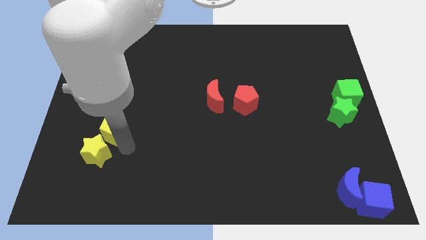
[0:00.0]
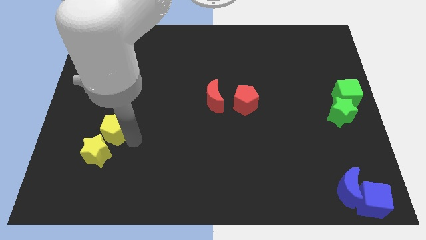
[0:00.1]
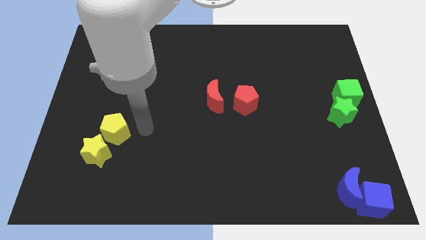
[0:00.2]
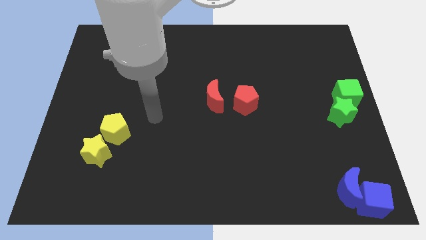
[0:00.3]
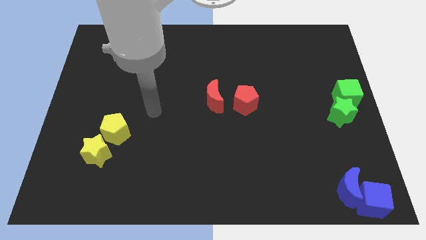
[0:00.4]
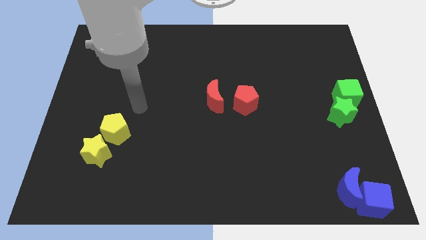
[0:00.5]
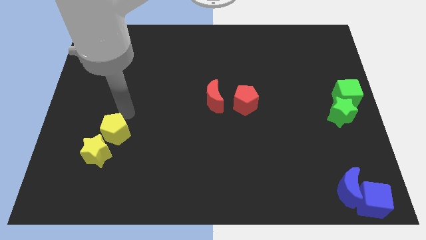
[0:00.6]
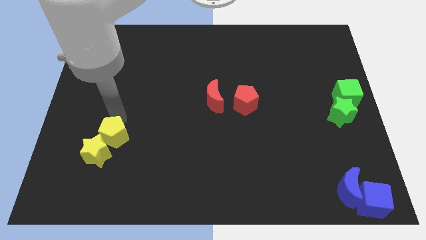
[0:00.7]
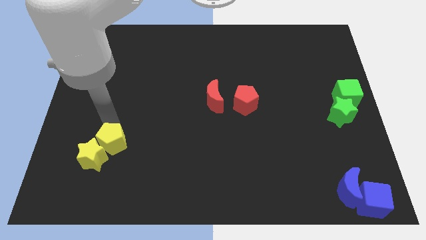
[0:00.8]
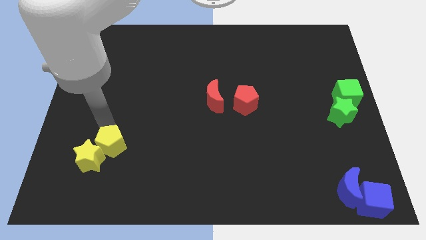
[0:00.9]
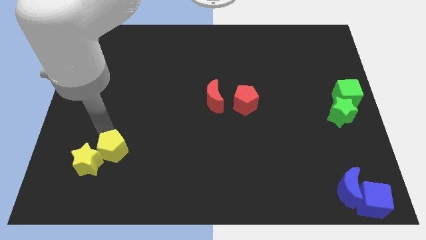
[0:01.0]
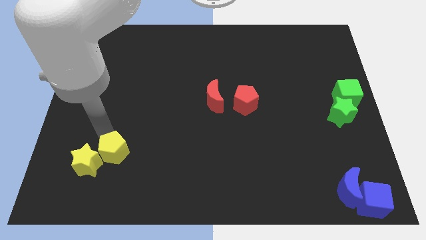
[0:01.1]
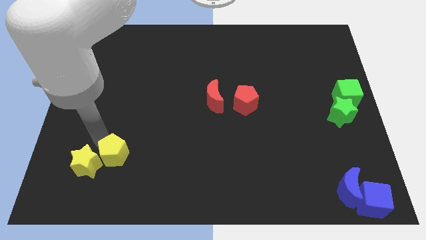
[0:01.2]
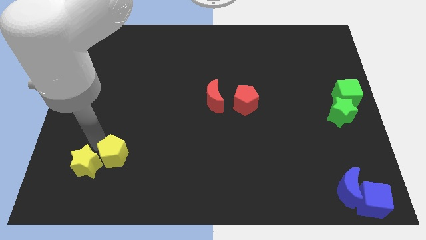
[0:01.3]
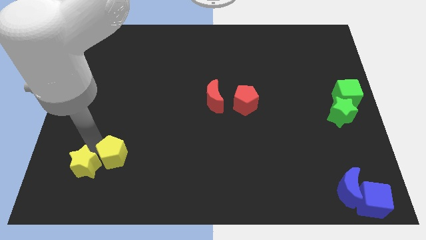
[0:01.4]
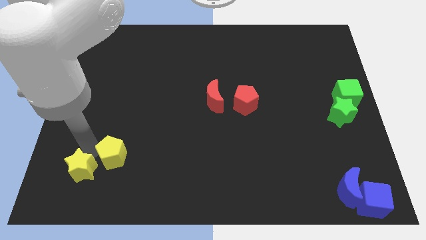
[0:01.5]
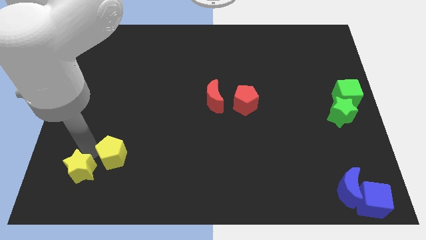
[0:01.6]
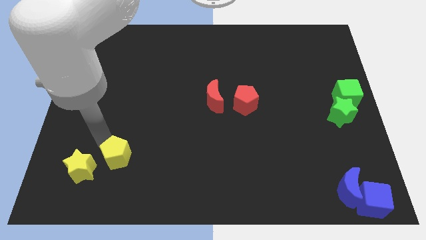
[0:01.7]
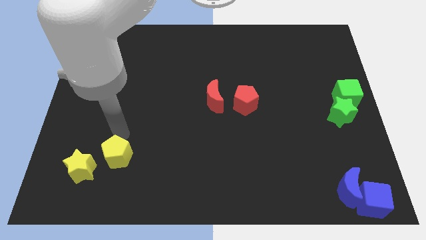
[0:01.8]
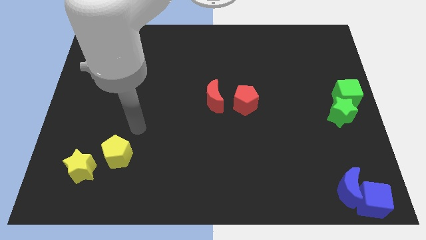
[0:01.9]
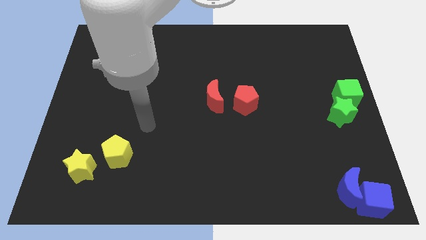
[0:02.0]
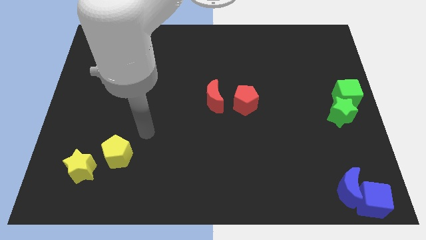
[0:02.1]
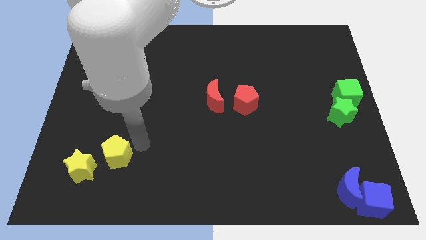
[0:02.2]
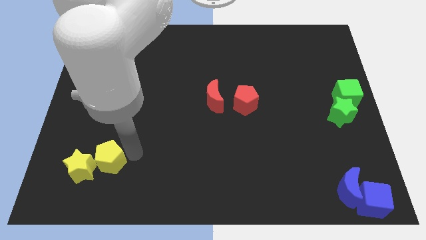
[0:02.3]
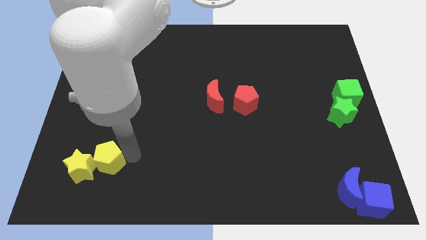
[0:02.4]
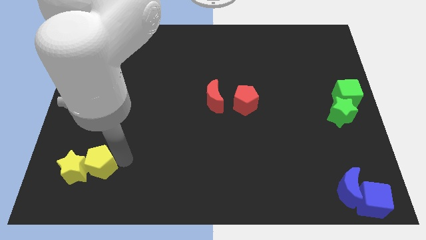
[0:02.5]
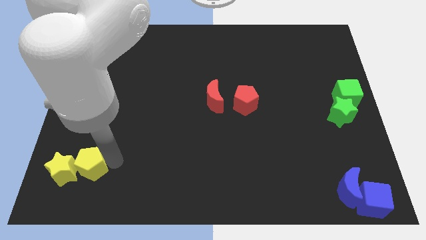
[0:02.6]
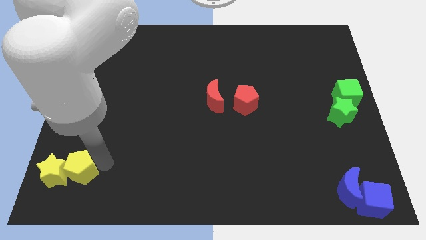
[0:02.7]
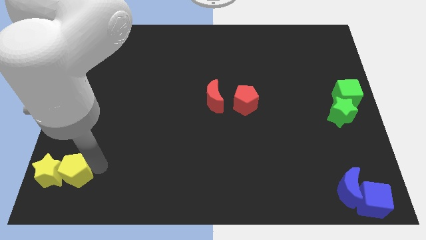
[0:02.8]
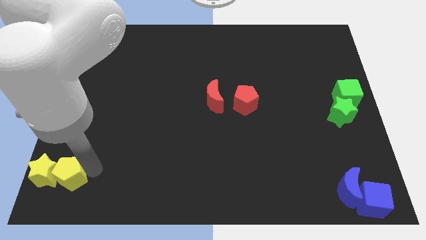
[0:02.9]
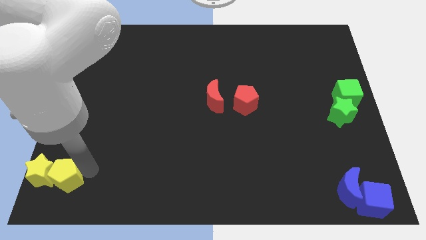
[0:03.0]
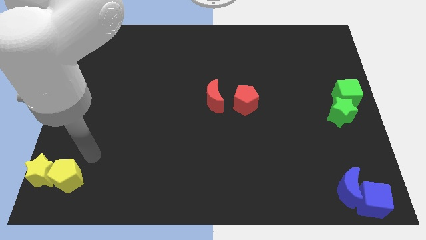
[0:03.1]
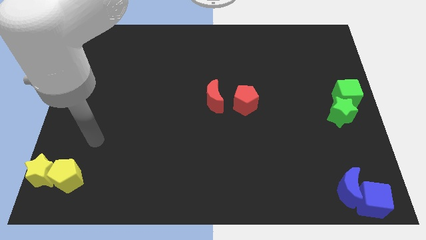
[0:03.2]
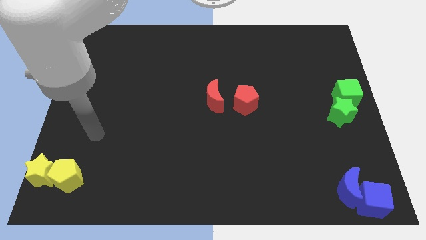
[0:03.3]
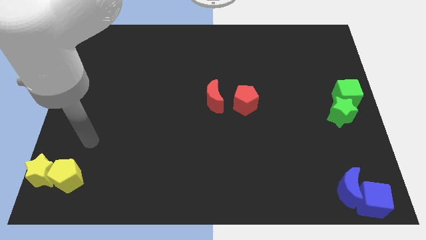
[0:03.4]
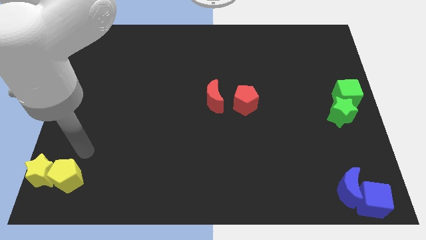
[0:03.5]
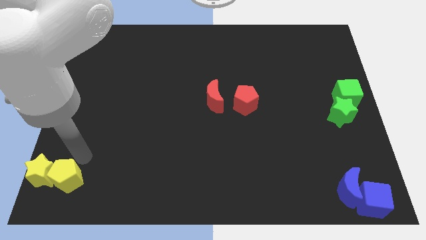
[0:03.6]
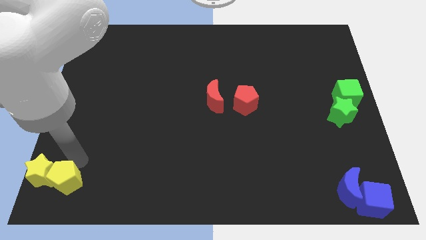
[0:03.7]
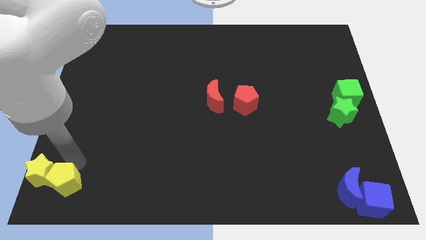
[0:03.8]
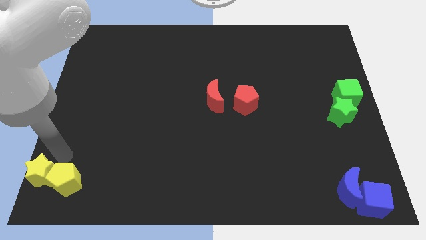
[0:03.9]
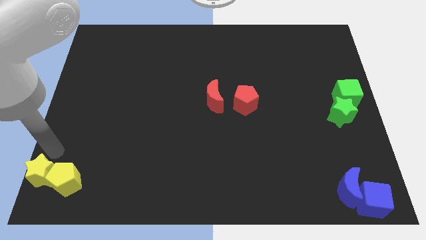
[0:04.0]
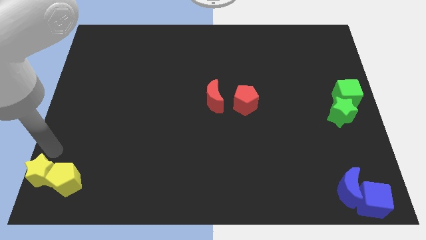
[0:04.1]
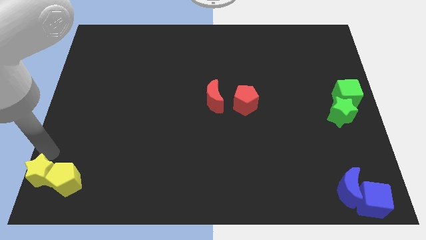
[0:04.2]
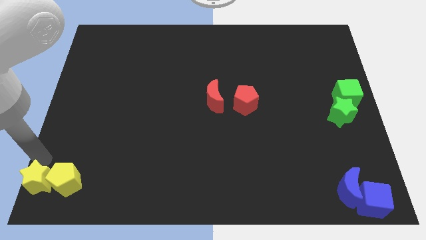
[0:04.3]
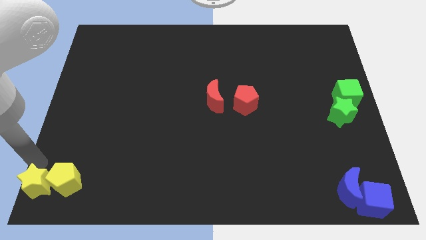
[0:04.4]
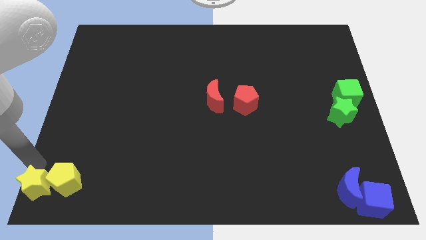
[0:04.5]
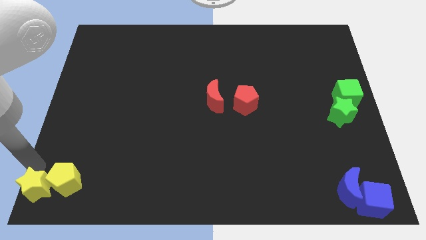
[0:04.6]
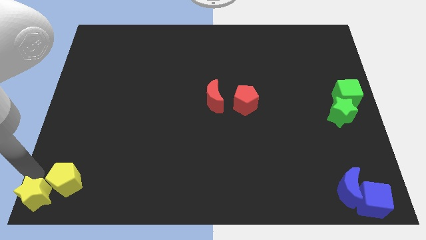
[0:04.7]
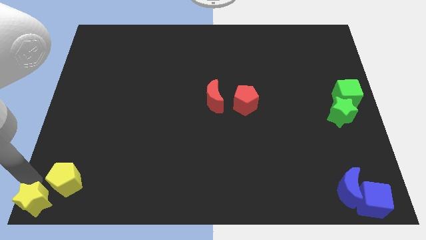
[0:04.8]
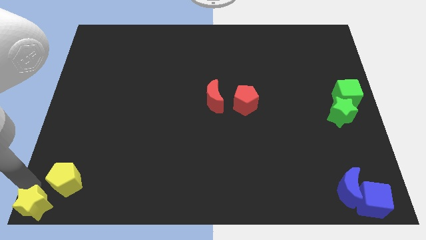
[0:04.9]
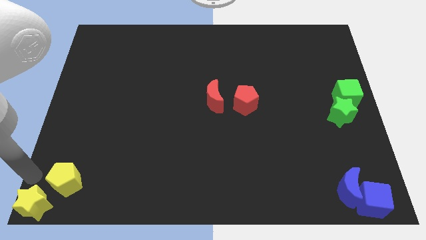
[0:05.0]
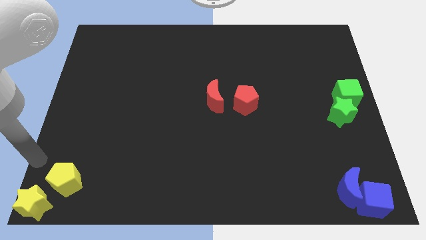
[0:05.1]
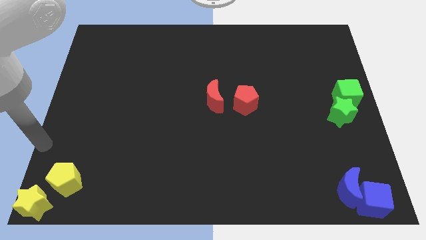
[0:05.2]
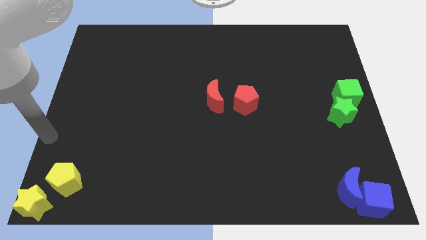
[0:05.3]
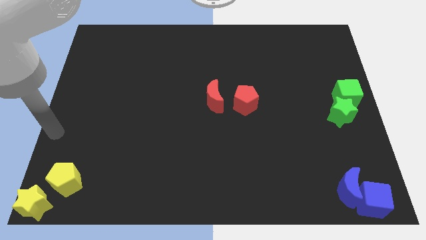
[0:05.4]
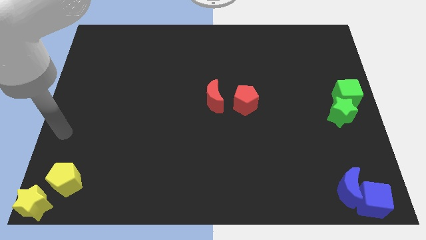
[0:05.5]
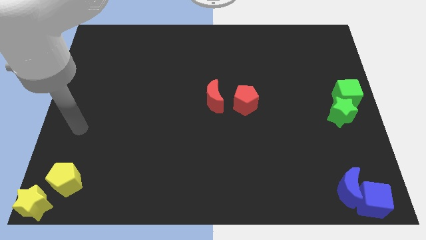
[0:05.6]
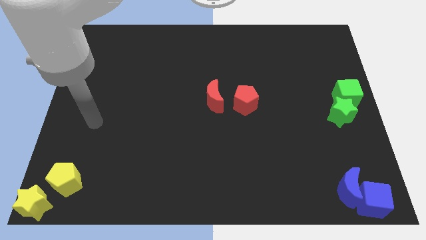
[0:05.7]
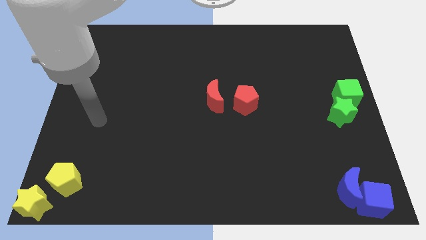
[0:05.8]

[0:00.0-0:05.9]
move the yellow blocks to the bottom left corner of the board

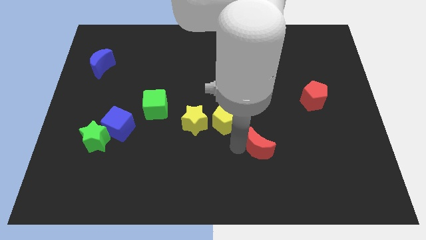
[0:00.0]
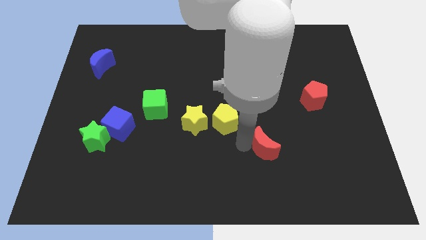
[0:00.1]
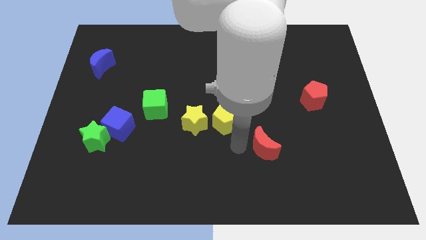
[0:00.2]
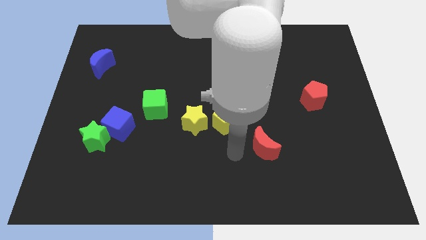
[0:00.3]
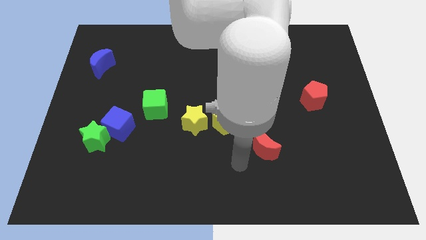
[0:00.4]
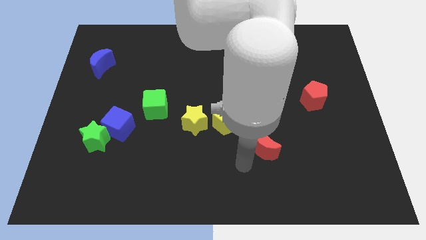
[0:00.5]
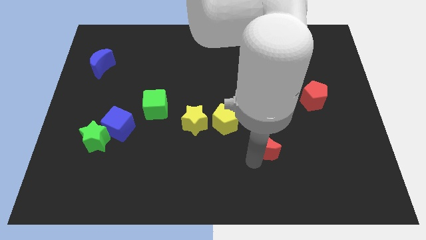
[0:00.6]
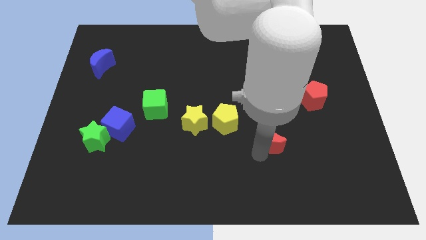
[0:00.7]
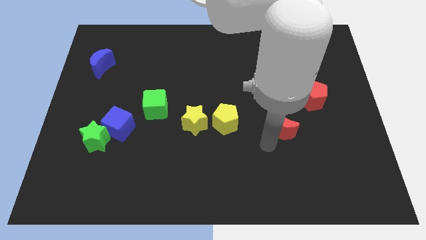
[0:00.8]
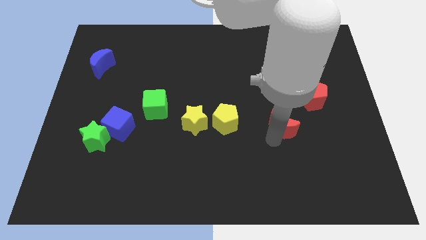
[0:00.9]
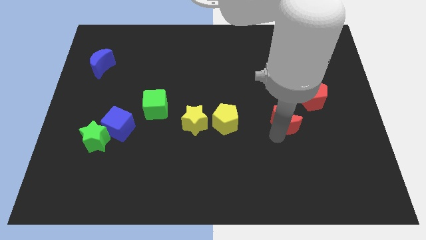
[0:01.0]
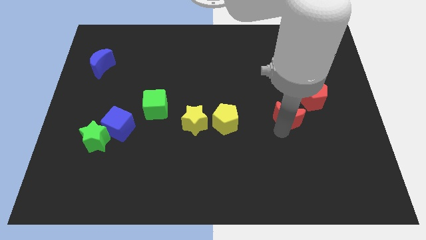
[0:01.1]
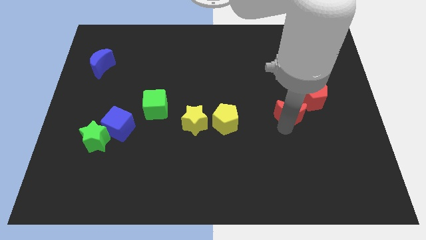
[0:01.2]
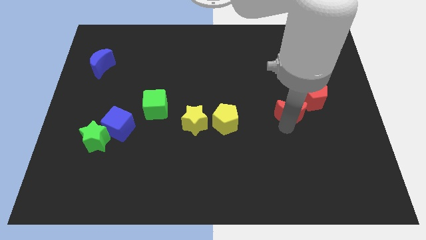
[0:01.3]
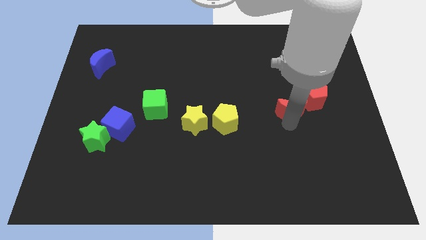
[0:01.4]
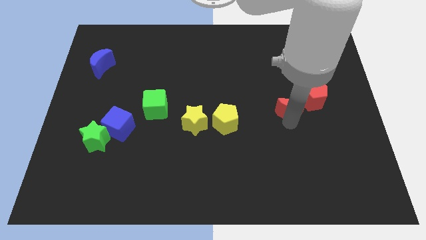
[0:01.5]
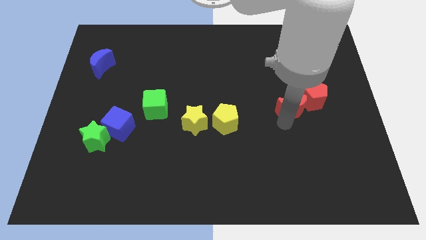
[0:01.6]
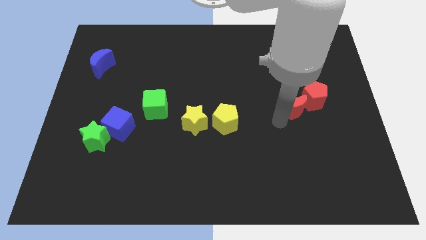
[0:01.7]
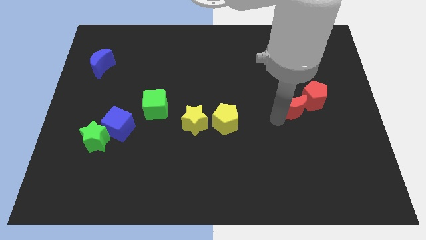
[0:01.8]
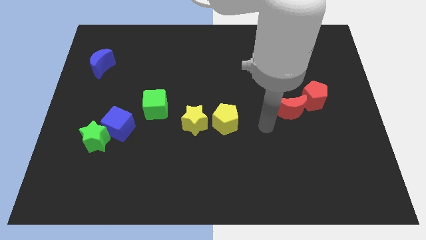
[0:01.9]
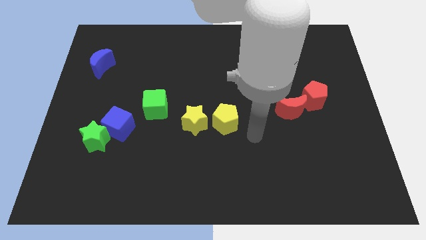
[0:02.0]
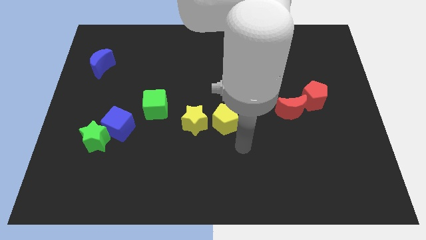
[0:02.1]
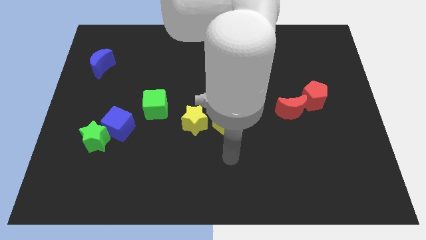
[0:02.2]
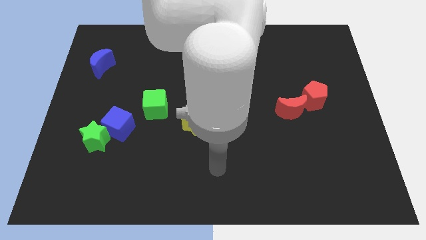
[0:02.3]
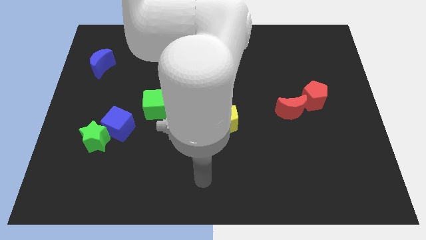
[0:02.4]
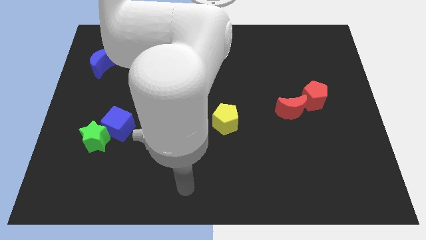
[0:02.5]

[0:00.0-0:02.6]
place the red moon to the left of the red pentagon

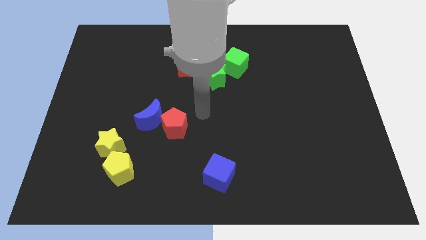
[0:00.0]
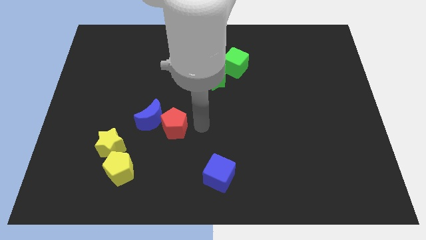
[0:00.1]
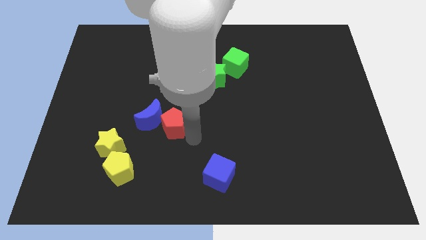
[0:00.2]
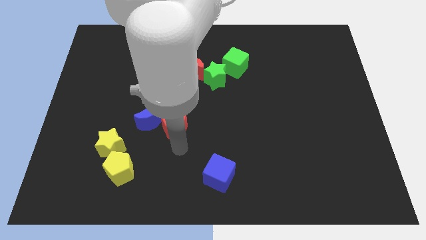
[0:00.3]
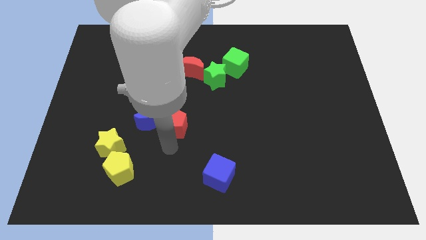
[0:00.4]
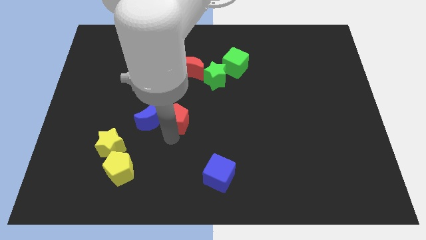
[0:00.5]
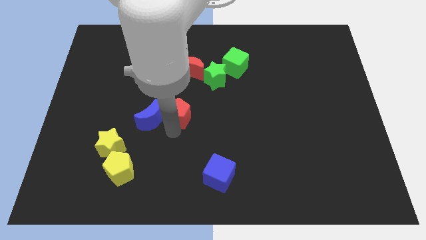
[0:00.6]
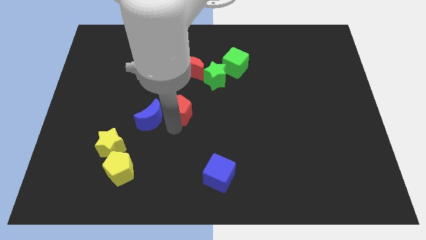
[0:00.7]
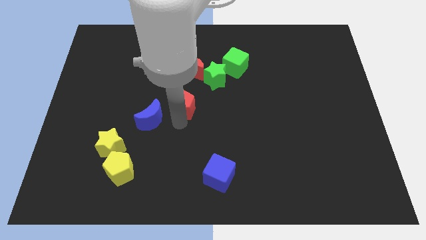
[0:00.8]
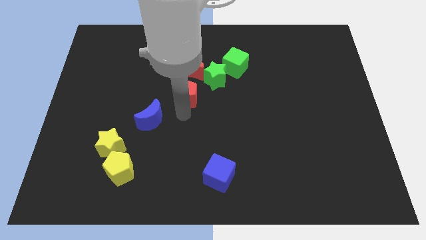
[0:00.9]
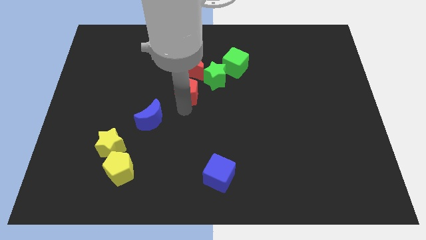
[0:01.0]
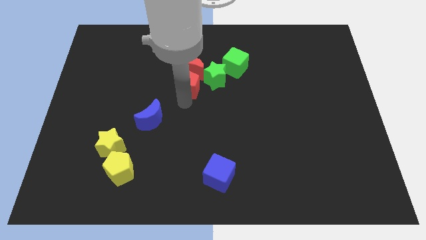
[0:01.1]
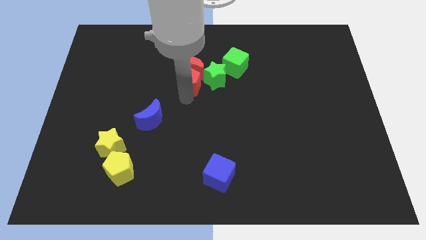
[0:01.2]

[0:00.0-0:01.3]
place the red pentagon at the bottom of the red crescent
